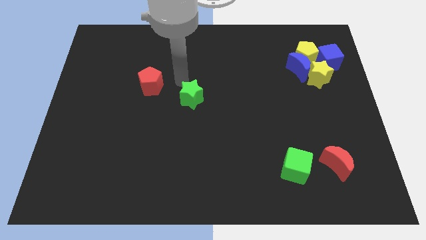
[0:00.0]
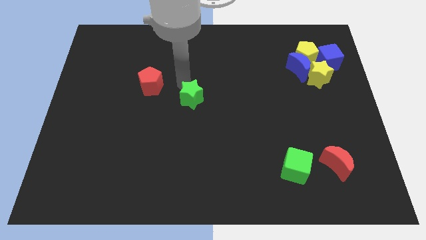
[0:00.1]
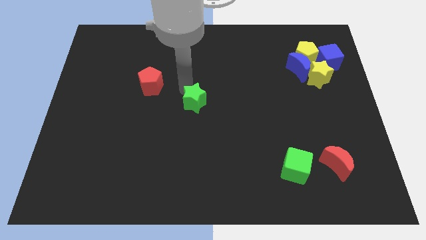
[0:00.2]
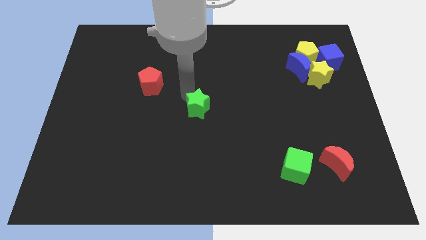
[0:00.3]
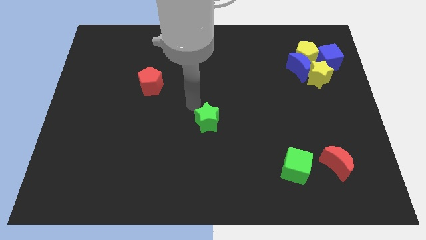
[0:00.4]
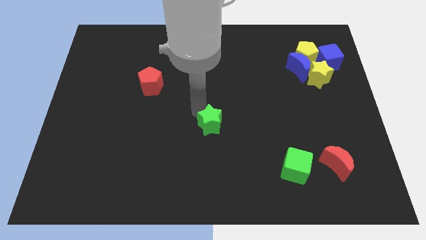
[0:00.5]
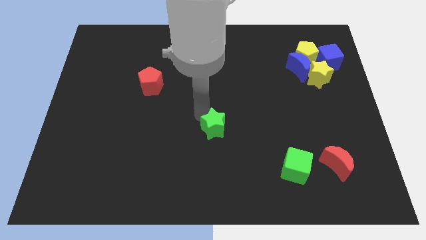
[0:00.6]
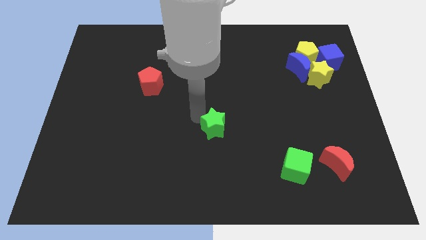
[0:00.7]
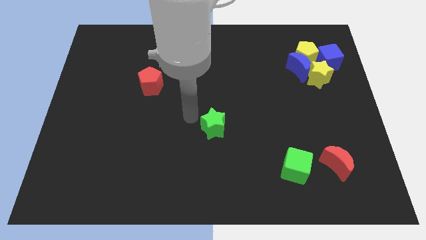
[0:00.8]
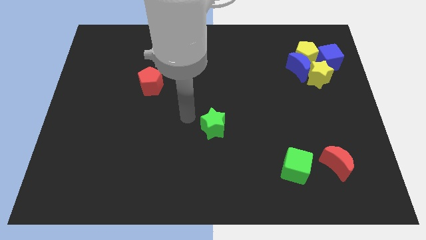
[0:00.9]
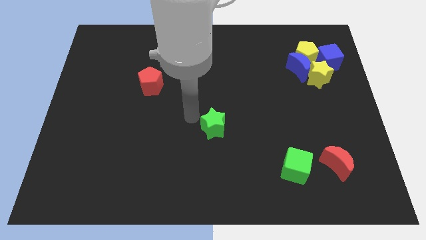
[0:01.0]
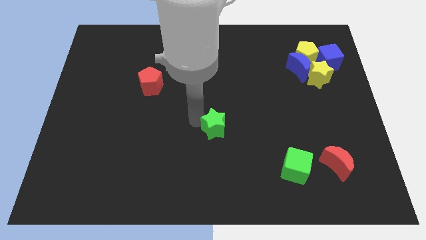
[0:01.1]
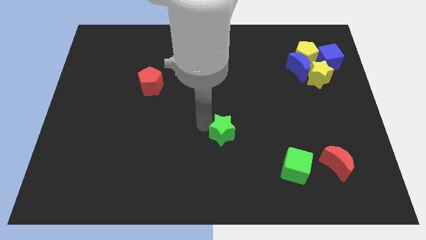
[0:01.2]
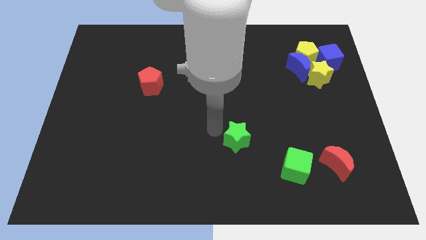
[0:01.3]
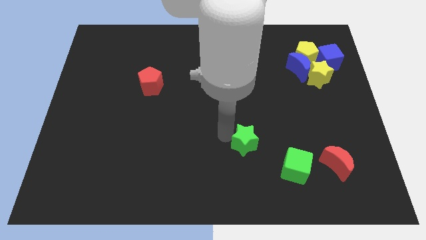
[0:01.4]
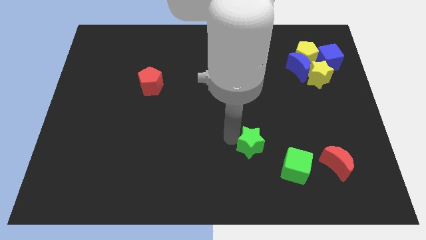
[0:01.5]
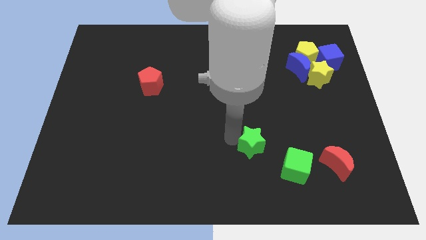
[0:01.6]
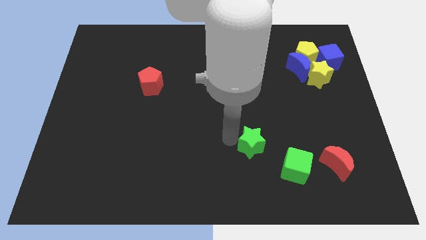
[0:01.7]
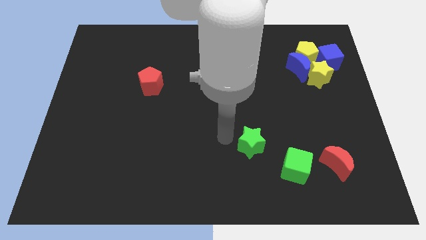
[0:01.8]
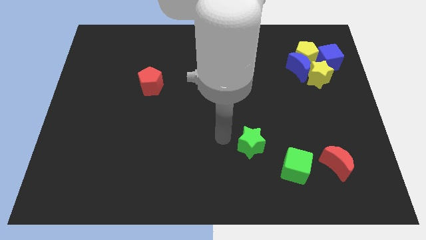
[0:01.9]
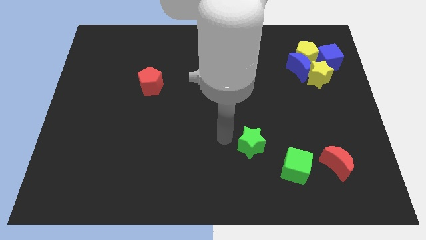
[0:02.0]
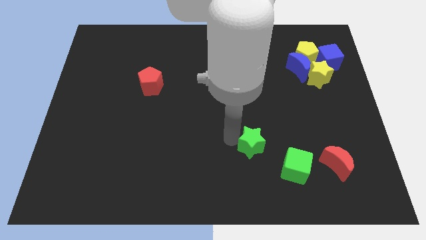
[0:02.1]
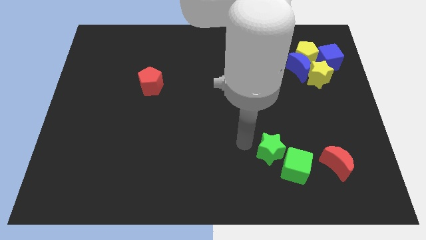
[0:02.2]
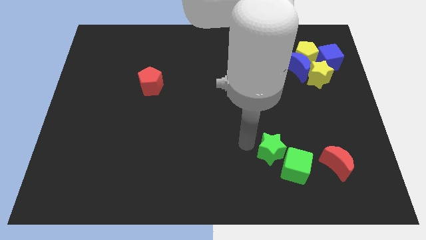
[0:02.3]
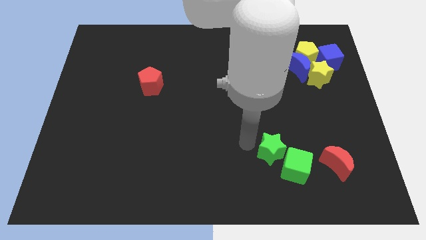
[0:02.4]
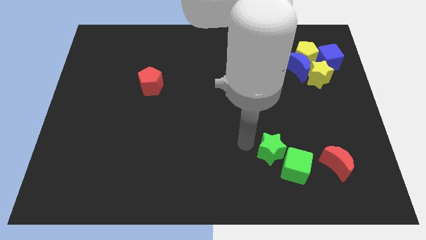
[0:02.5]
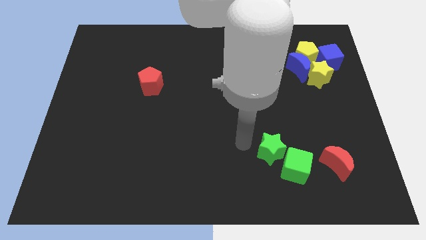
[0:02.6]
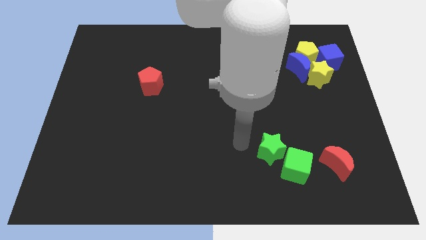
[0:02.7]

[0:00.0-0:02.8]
move the green star near to the green cube

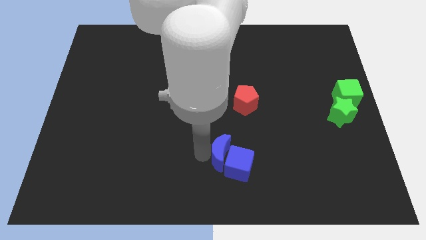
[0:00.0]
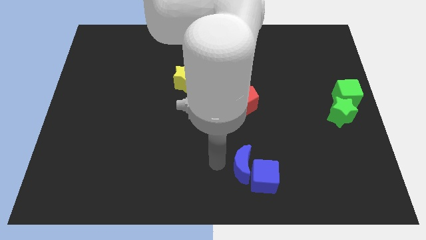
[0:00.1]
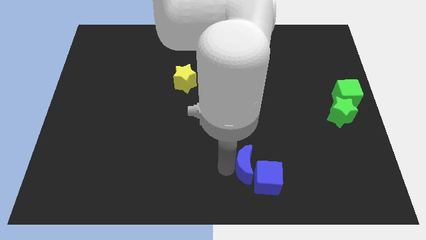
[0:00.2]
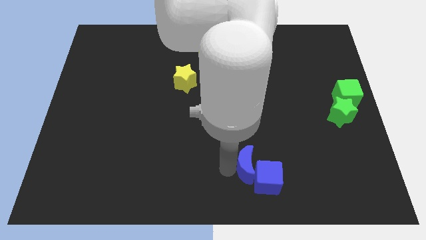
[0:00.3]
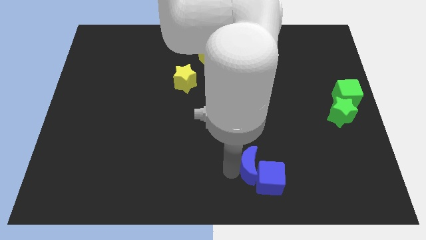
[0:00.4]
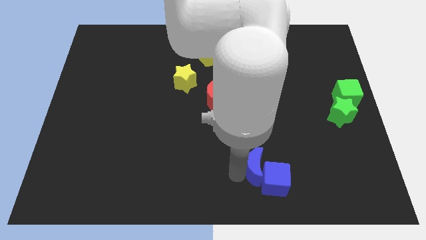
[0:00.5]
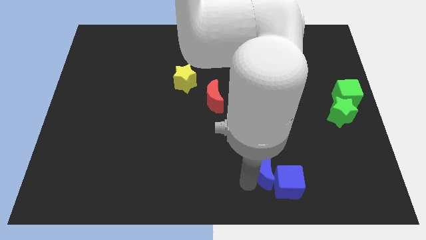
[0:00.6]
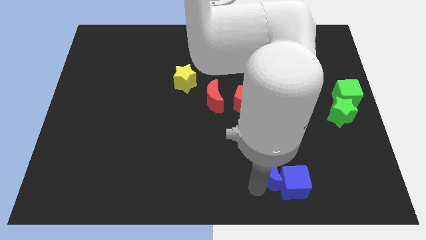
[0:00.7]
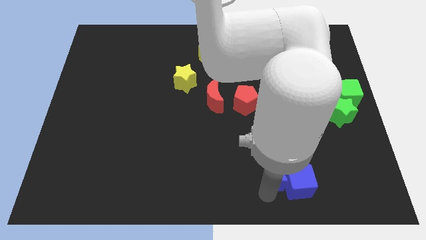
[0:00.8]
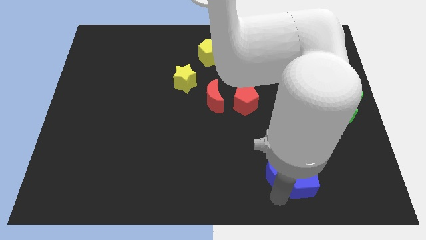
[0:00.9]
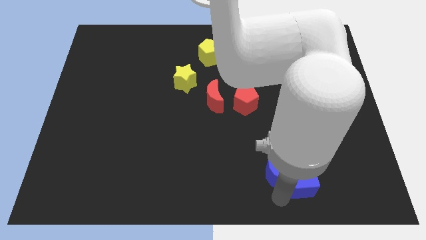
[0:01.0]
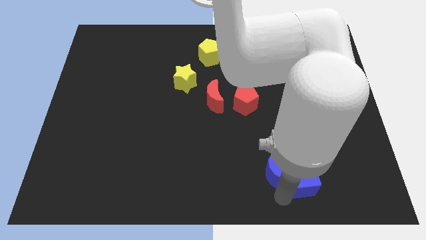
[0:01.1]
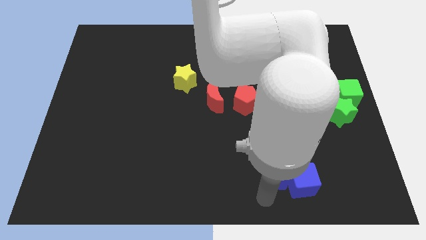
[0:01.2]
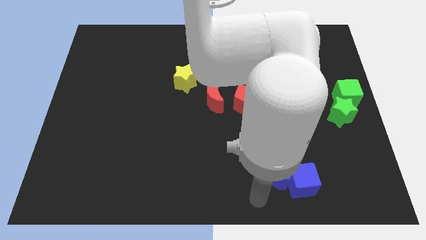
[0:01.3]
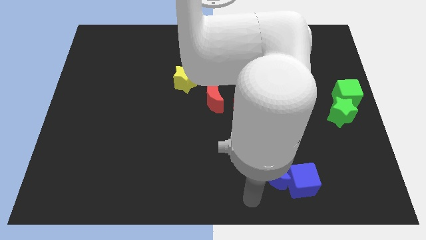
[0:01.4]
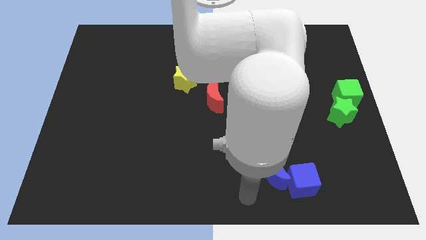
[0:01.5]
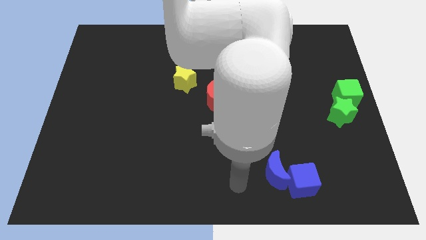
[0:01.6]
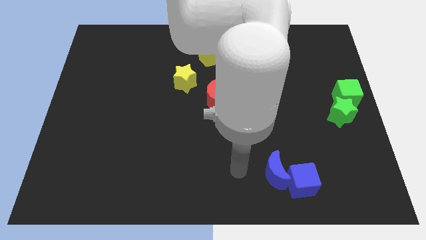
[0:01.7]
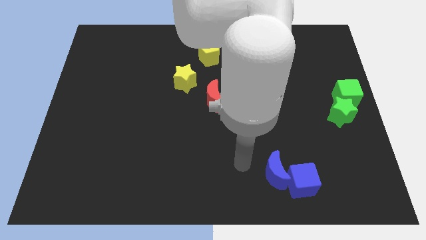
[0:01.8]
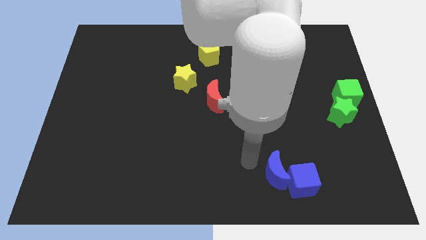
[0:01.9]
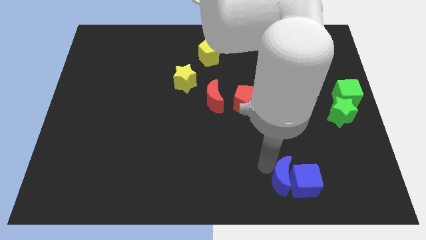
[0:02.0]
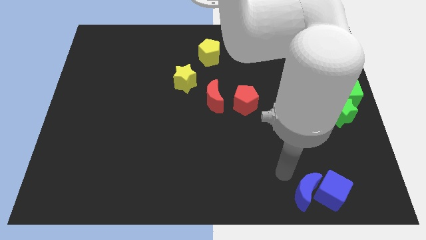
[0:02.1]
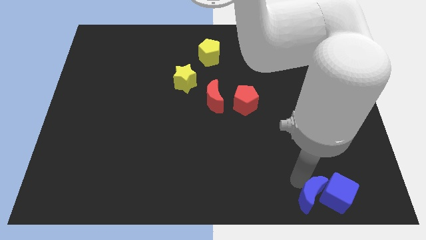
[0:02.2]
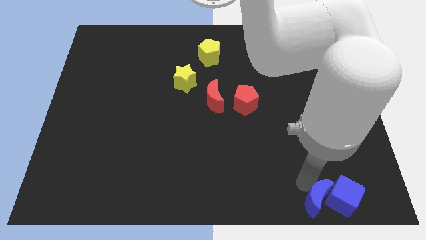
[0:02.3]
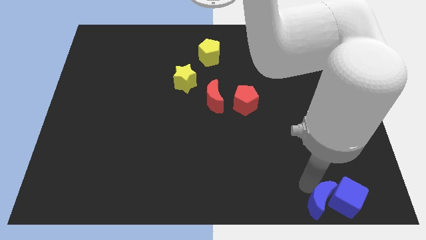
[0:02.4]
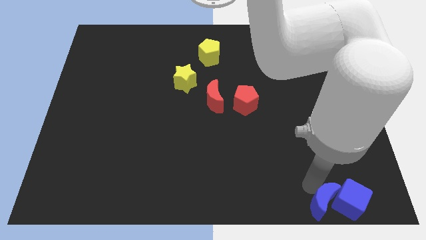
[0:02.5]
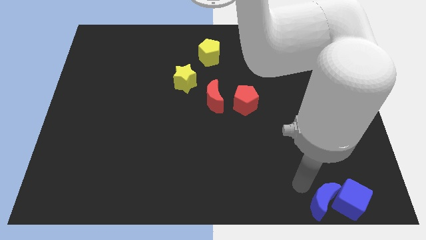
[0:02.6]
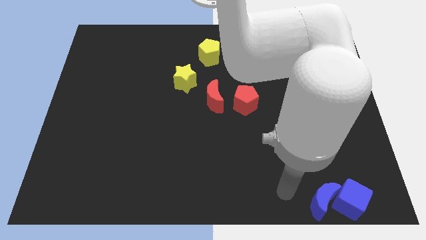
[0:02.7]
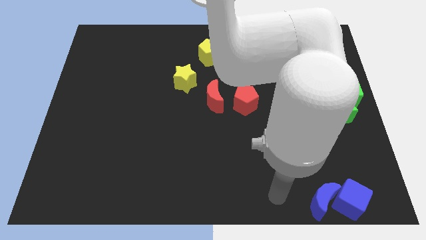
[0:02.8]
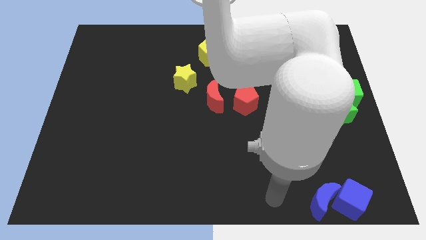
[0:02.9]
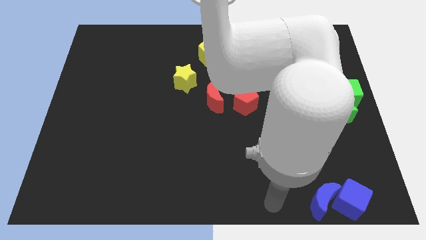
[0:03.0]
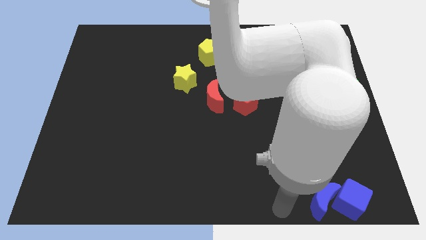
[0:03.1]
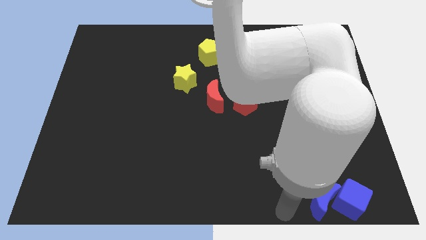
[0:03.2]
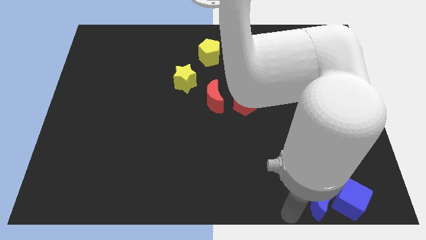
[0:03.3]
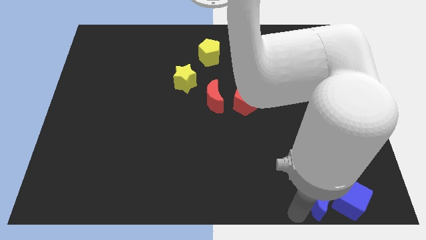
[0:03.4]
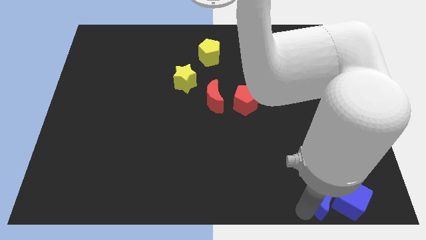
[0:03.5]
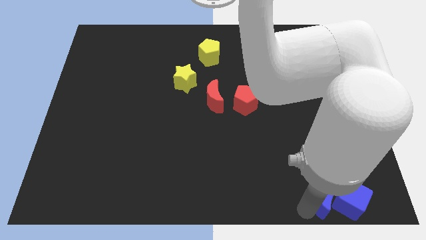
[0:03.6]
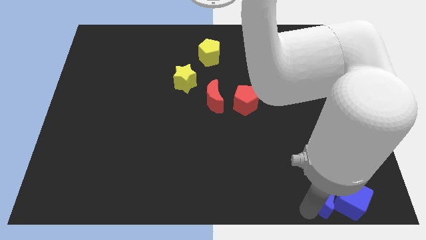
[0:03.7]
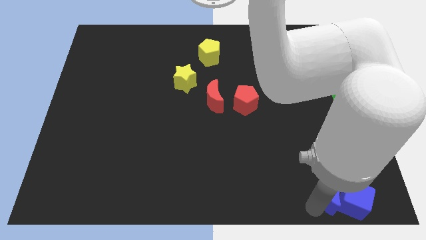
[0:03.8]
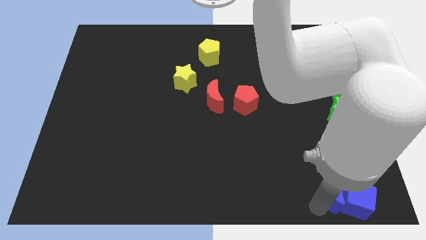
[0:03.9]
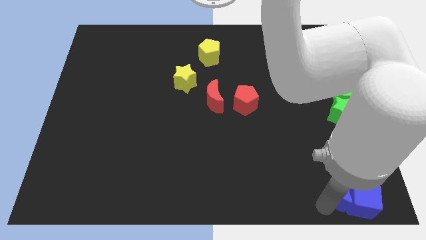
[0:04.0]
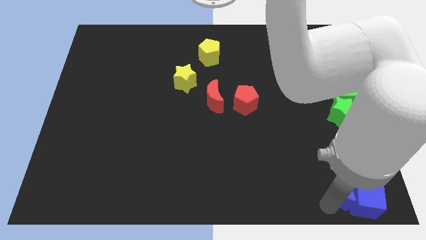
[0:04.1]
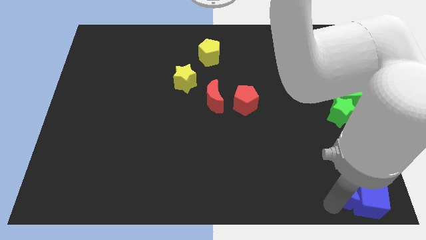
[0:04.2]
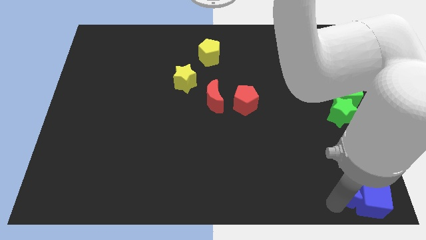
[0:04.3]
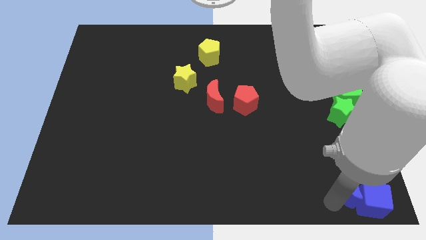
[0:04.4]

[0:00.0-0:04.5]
push the blue blocks to the bottom right corner of the board

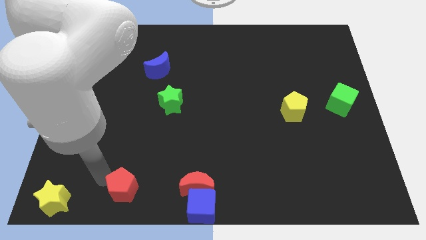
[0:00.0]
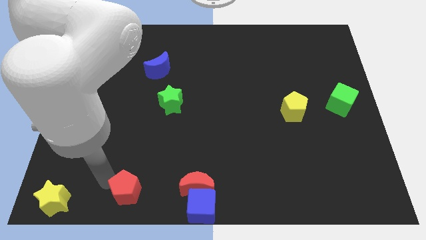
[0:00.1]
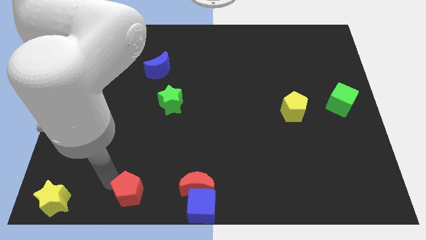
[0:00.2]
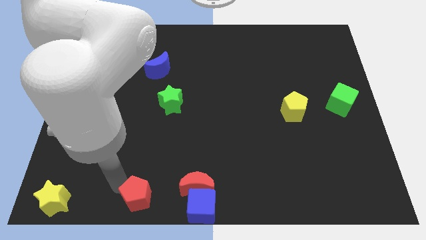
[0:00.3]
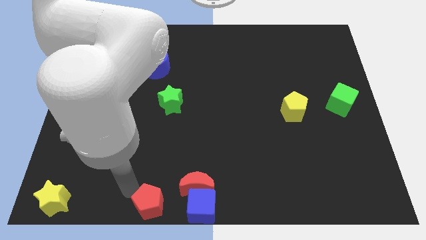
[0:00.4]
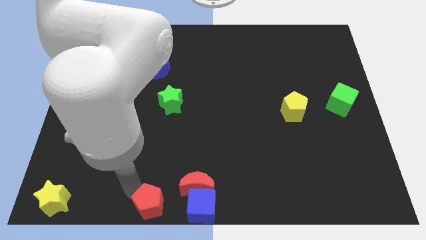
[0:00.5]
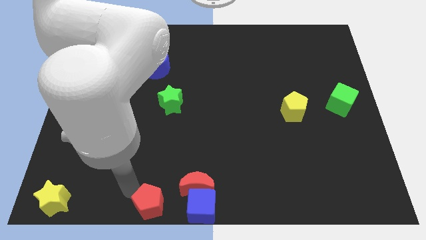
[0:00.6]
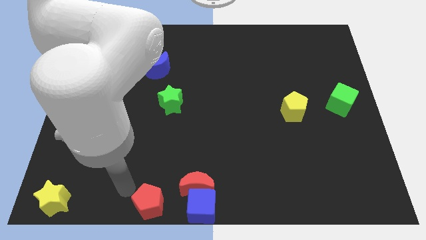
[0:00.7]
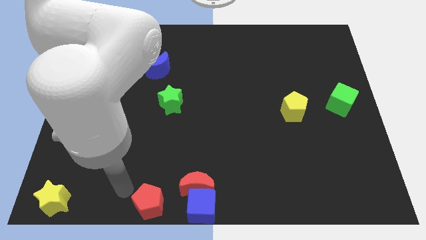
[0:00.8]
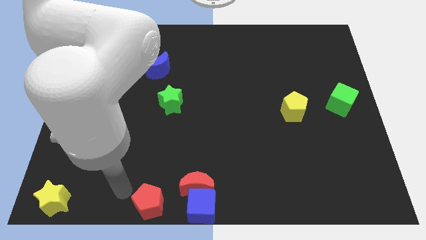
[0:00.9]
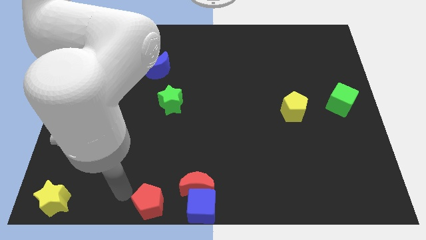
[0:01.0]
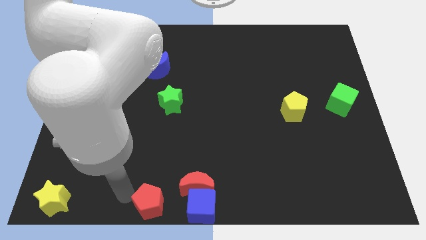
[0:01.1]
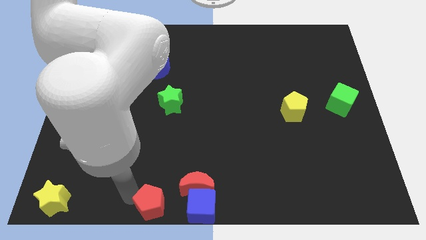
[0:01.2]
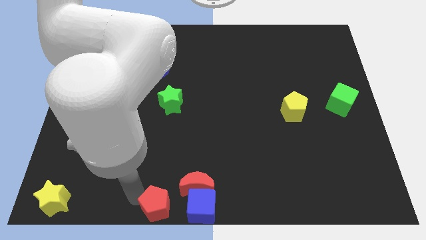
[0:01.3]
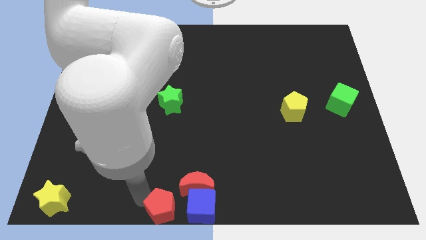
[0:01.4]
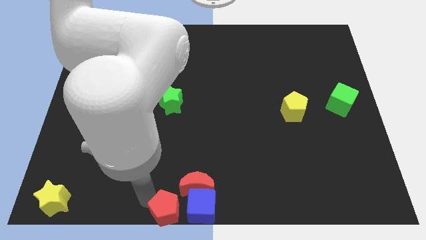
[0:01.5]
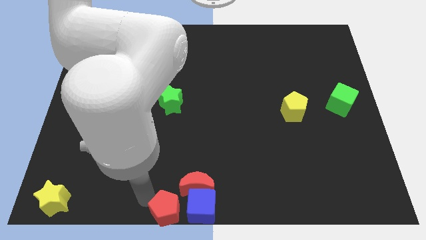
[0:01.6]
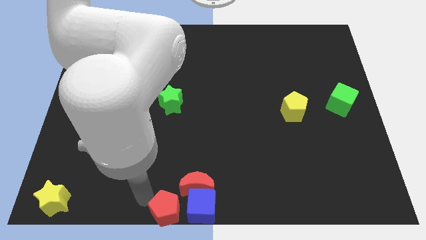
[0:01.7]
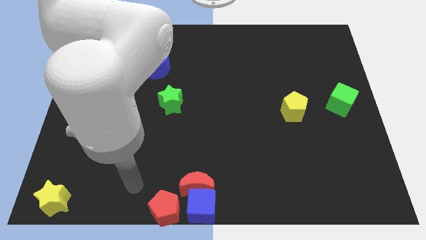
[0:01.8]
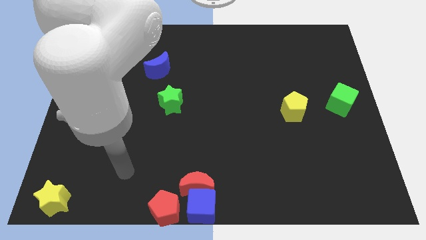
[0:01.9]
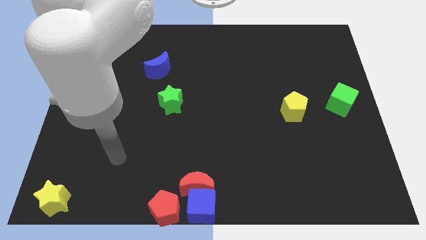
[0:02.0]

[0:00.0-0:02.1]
push red pentagon to the bottom center
